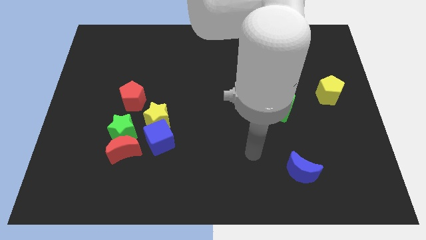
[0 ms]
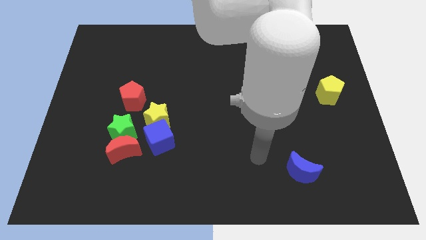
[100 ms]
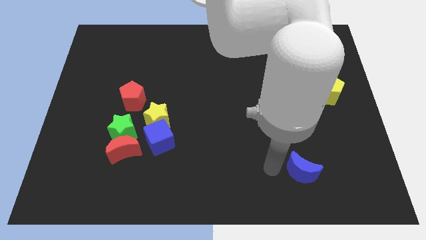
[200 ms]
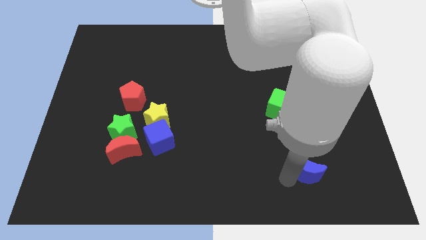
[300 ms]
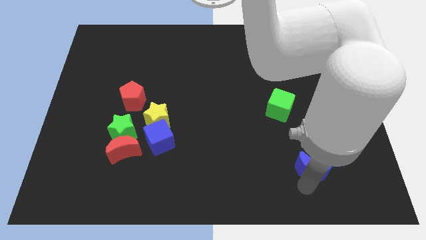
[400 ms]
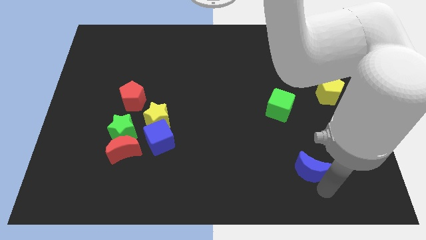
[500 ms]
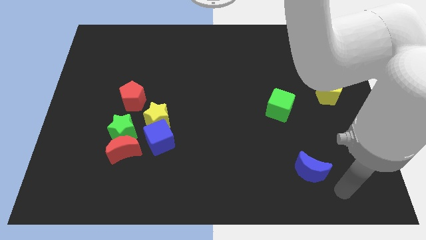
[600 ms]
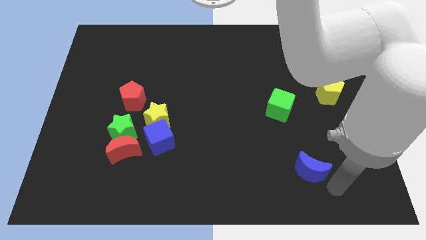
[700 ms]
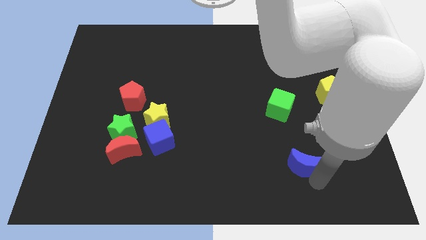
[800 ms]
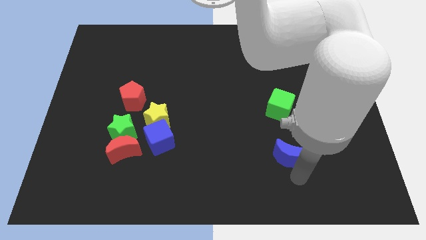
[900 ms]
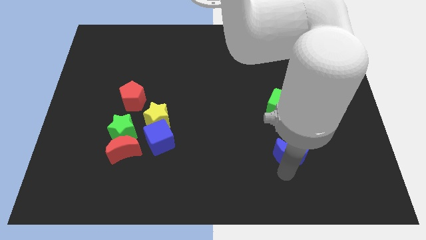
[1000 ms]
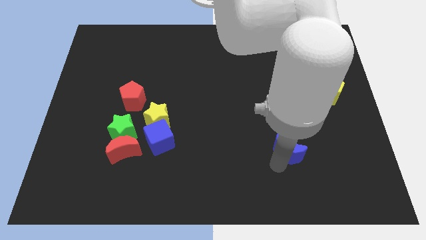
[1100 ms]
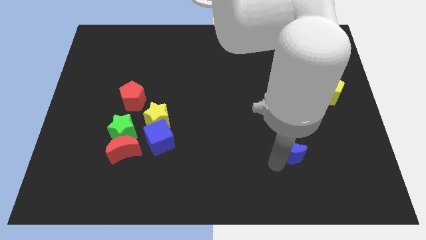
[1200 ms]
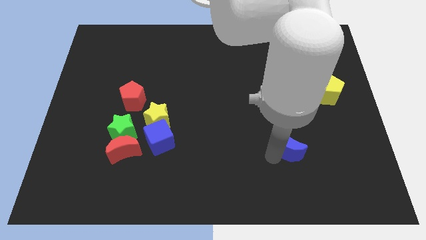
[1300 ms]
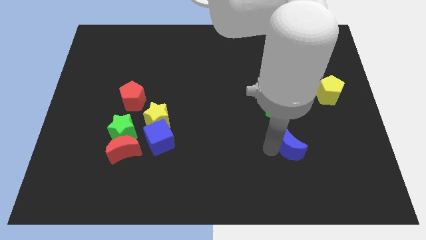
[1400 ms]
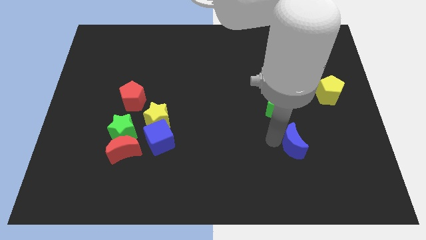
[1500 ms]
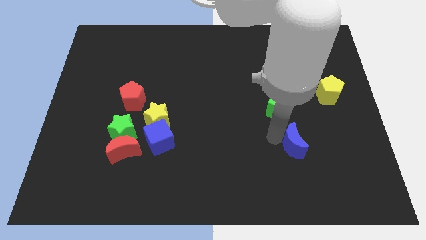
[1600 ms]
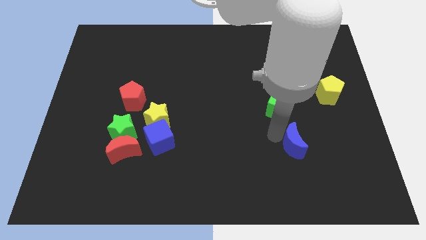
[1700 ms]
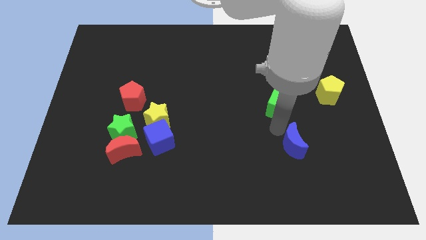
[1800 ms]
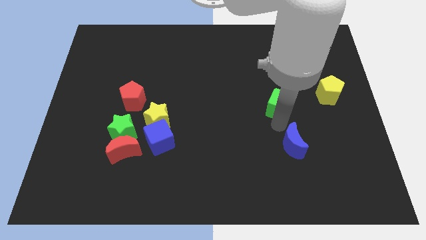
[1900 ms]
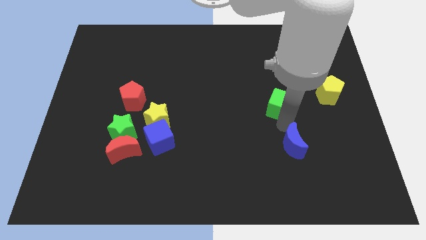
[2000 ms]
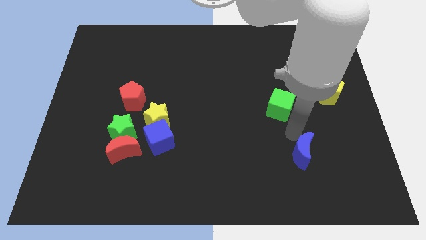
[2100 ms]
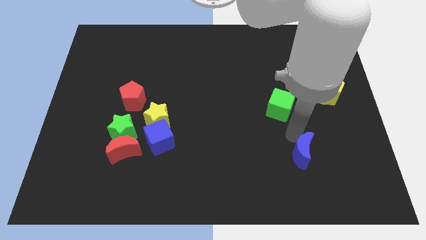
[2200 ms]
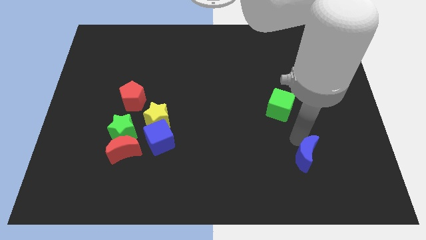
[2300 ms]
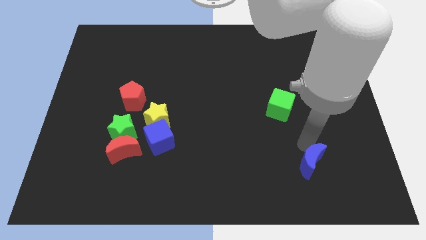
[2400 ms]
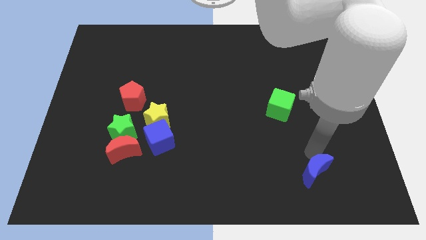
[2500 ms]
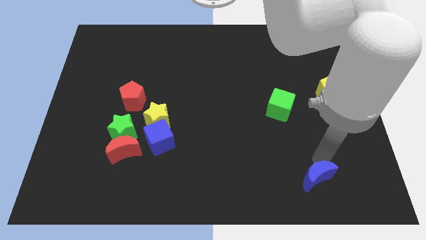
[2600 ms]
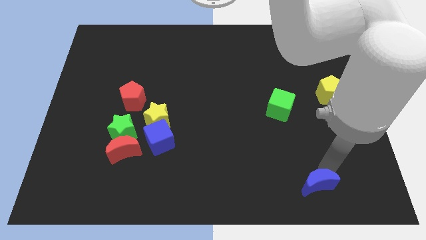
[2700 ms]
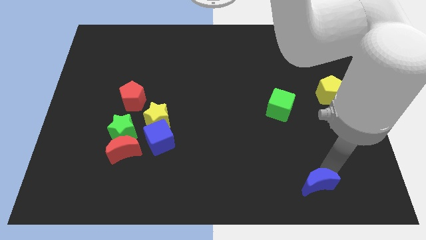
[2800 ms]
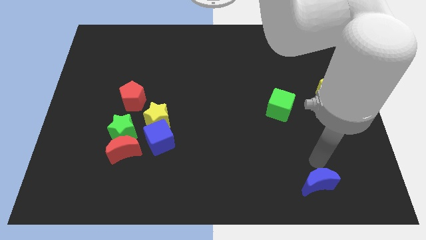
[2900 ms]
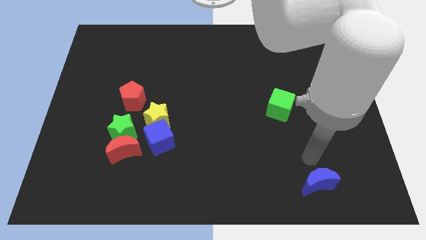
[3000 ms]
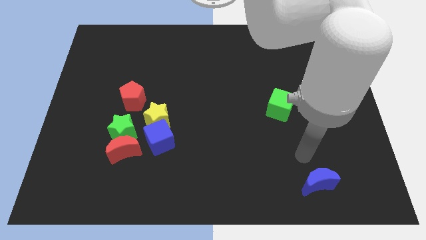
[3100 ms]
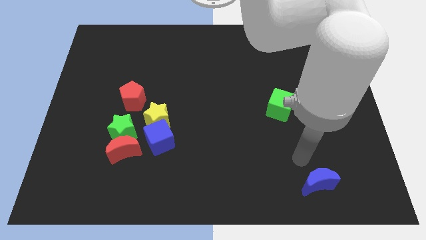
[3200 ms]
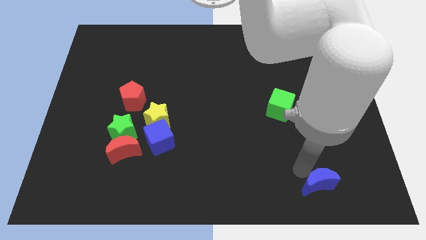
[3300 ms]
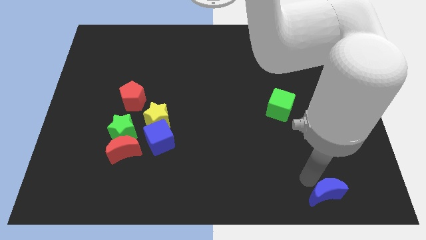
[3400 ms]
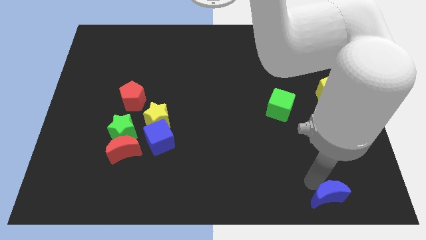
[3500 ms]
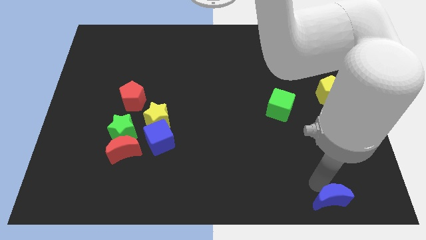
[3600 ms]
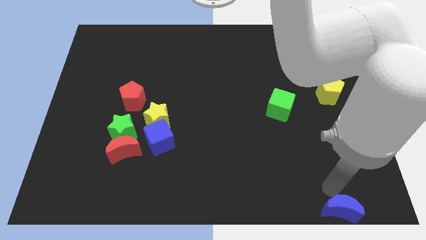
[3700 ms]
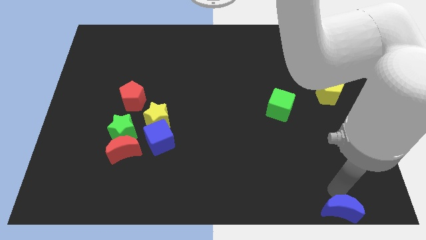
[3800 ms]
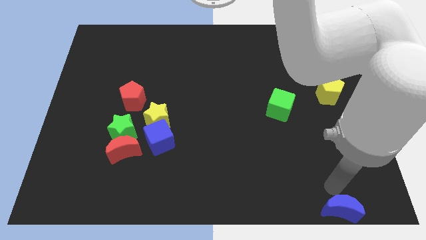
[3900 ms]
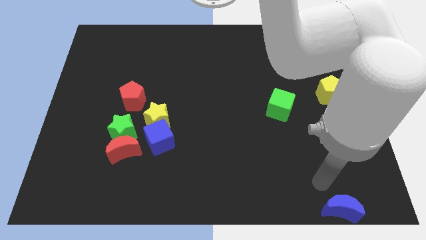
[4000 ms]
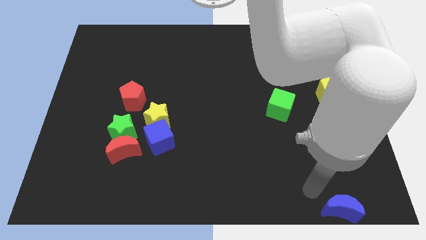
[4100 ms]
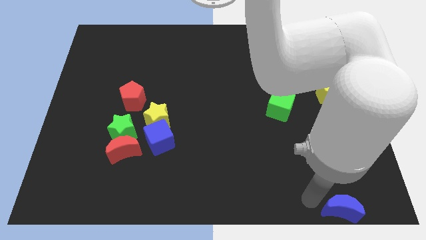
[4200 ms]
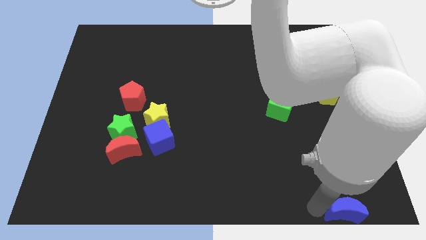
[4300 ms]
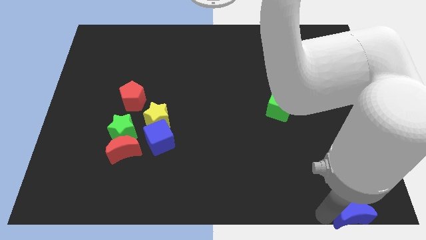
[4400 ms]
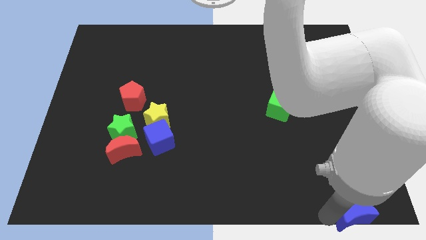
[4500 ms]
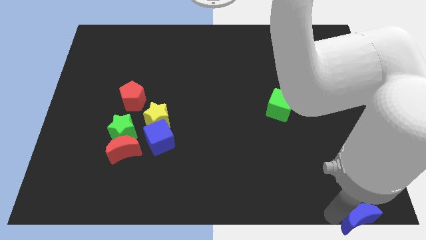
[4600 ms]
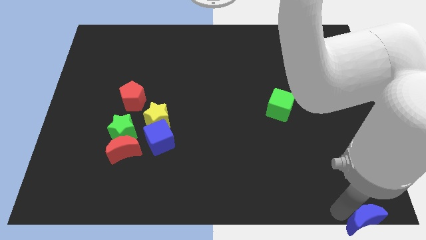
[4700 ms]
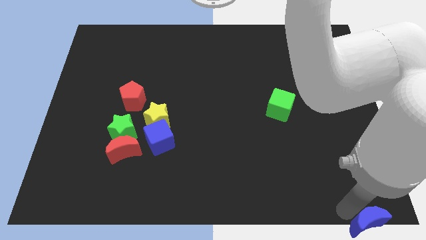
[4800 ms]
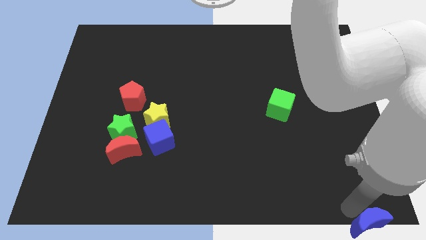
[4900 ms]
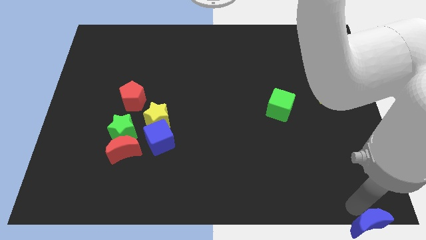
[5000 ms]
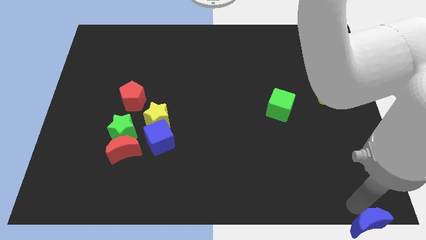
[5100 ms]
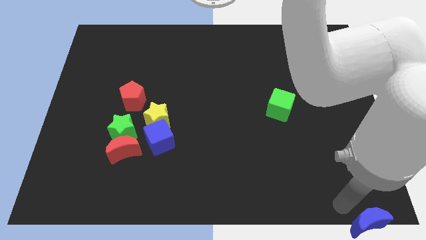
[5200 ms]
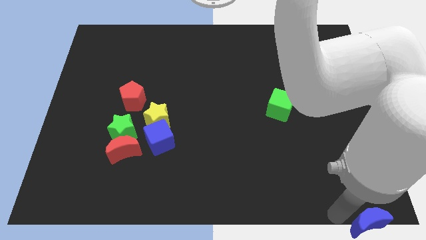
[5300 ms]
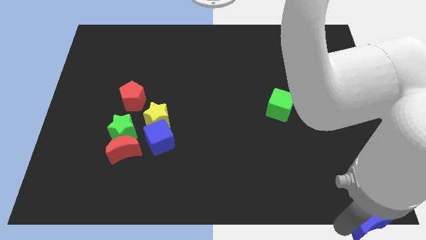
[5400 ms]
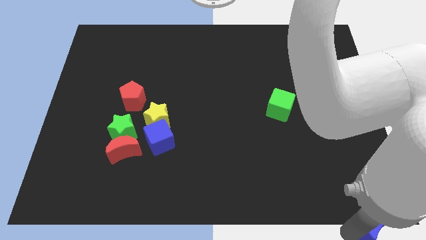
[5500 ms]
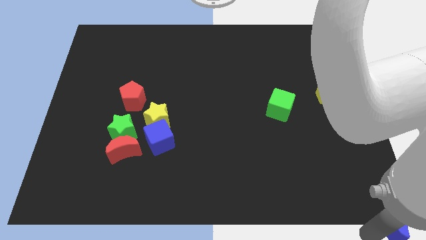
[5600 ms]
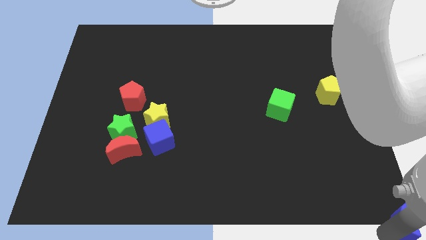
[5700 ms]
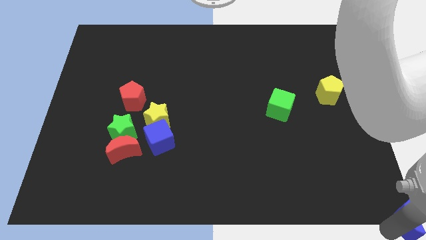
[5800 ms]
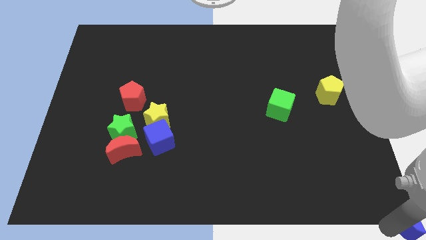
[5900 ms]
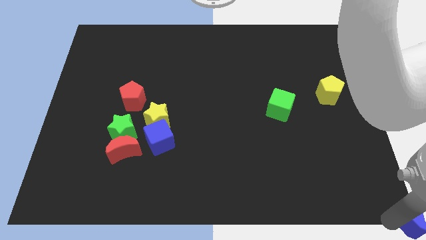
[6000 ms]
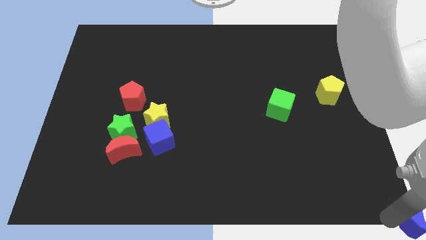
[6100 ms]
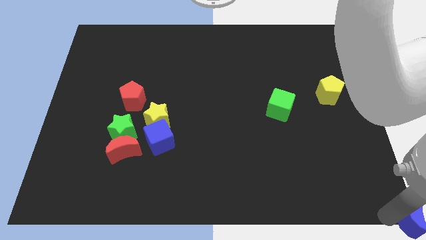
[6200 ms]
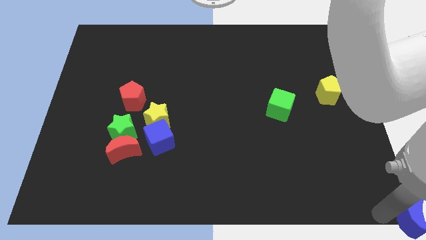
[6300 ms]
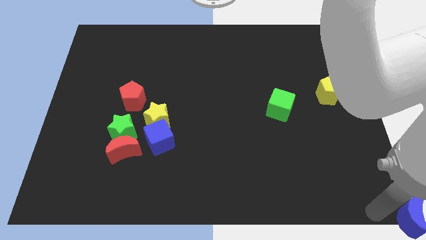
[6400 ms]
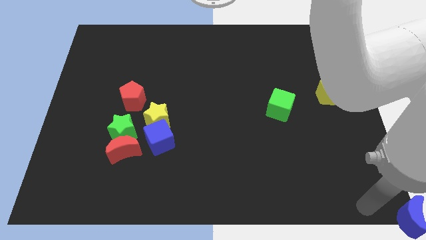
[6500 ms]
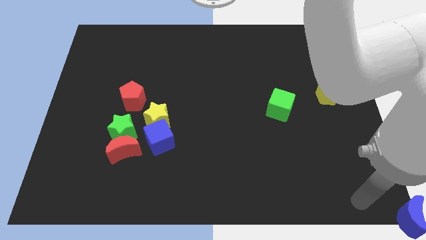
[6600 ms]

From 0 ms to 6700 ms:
move the blue crescent to the bottom right corner of the board

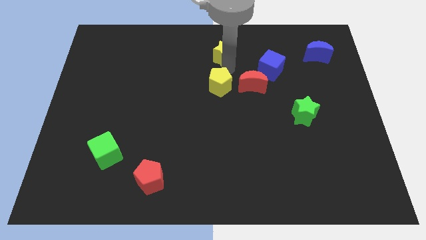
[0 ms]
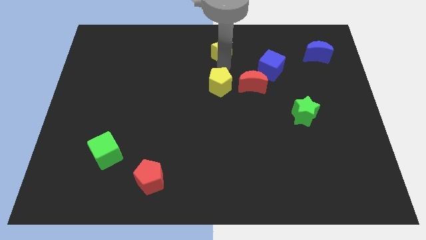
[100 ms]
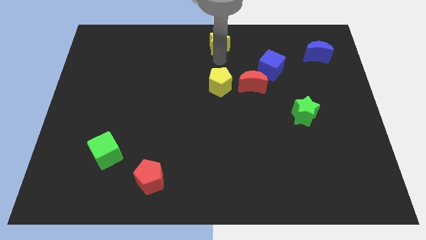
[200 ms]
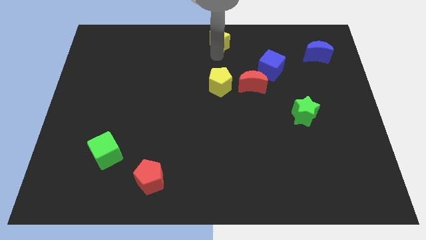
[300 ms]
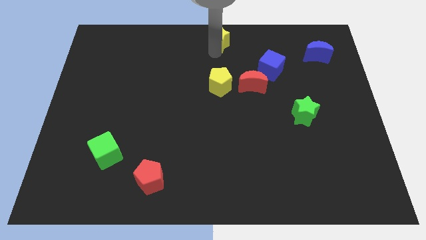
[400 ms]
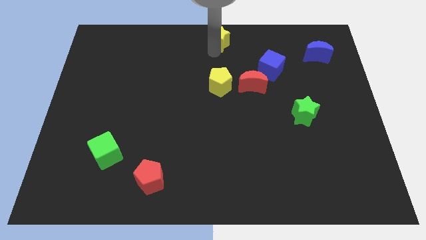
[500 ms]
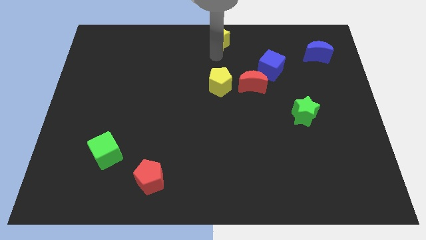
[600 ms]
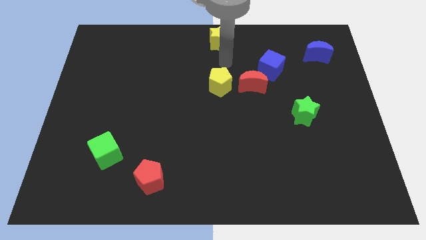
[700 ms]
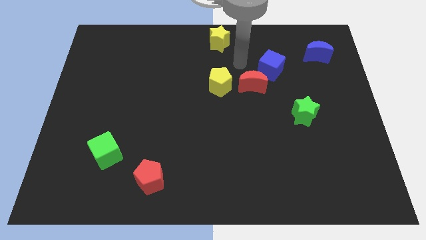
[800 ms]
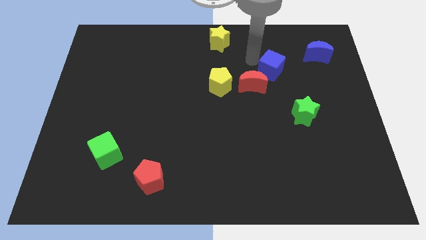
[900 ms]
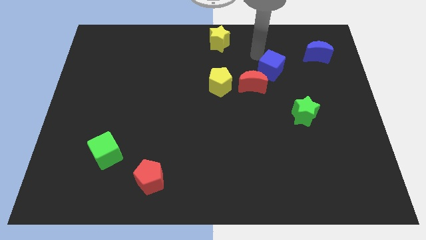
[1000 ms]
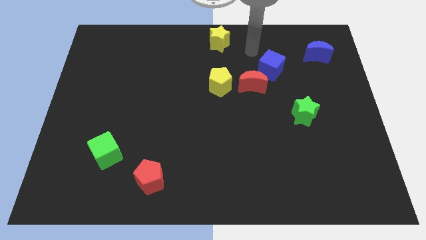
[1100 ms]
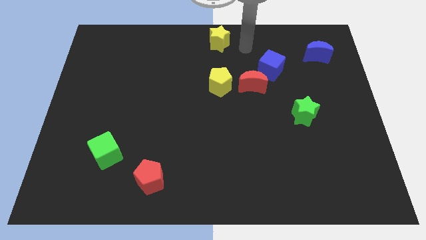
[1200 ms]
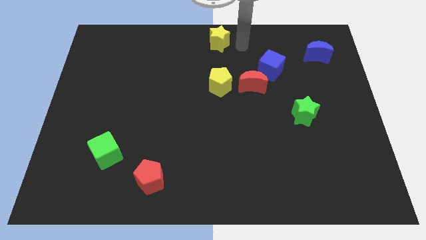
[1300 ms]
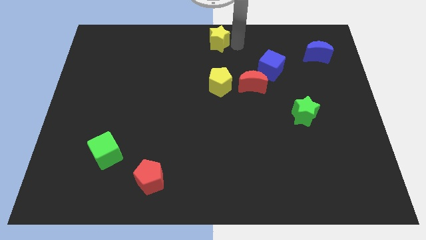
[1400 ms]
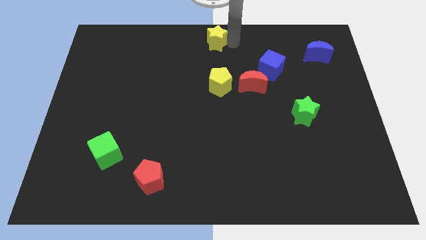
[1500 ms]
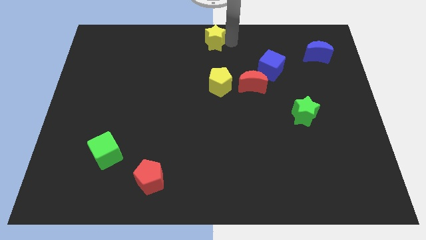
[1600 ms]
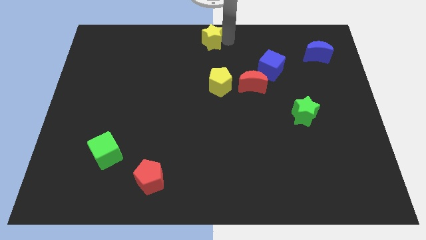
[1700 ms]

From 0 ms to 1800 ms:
move the yellow star to the top center of the board

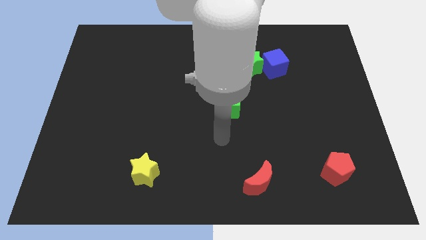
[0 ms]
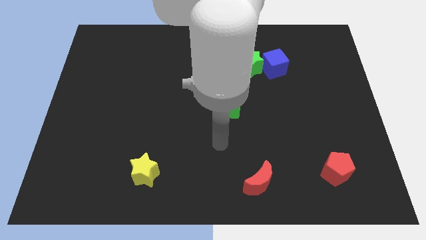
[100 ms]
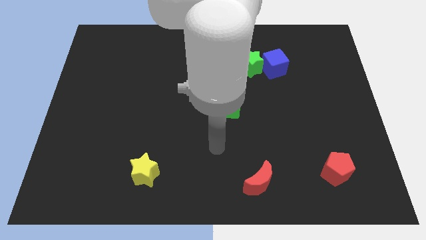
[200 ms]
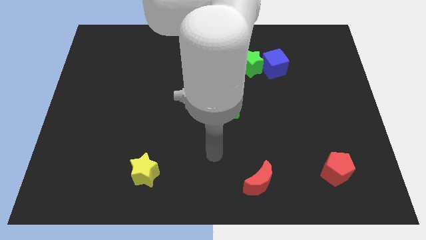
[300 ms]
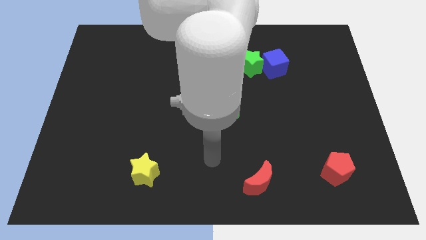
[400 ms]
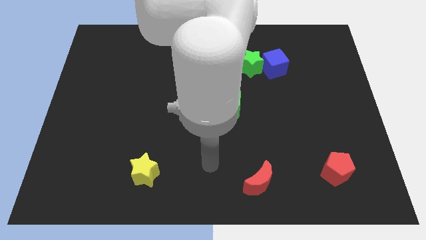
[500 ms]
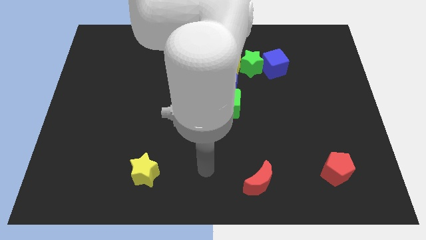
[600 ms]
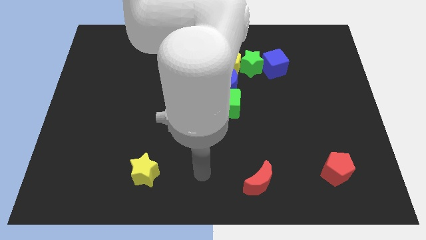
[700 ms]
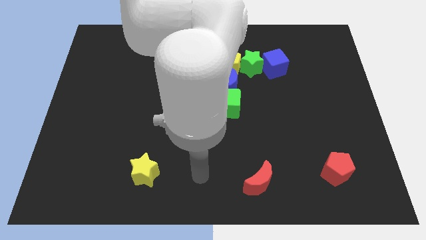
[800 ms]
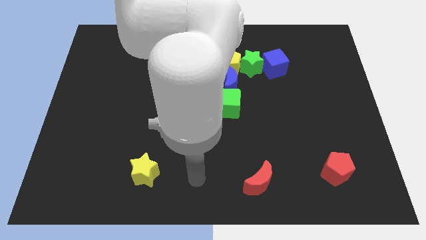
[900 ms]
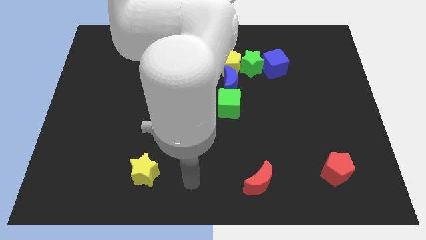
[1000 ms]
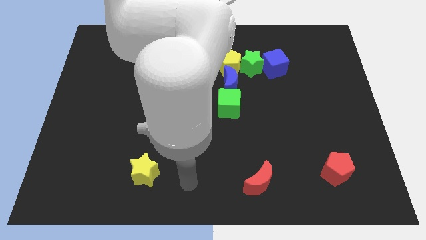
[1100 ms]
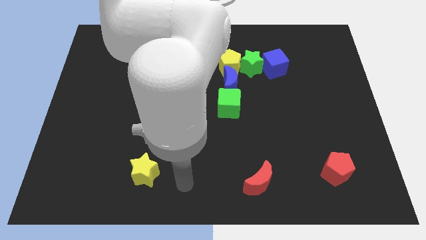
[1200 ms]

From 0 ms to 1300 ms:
move the arm right to the yellow star
